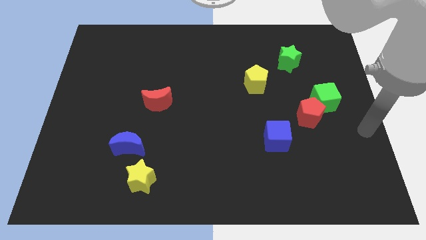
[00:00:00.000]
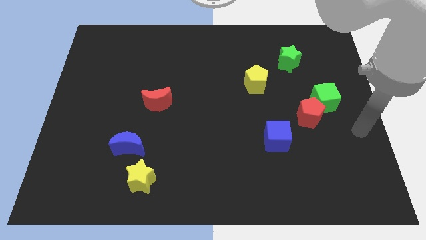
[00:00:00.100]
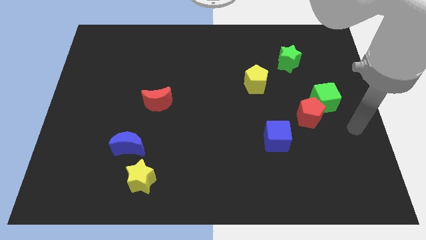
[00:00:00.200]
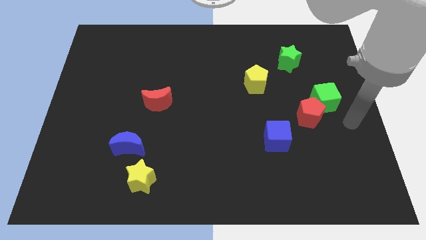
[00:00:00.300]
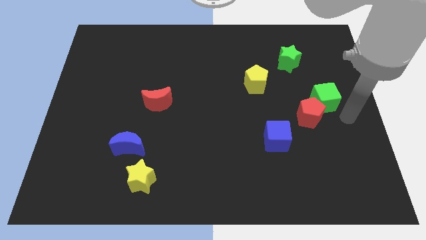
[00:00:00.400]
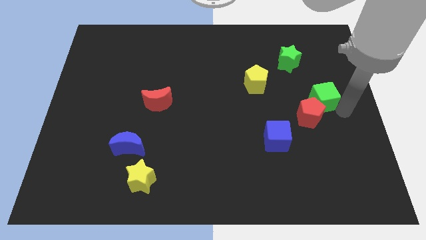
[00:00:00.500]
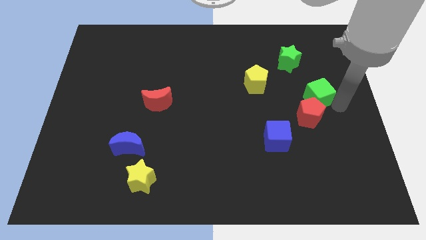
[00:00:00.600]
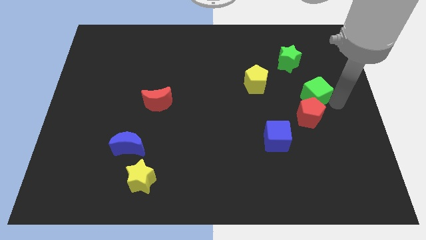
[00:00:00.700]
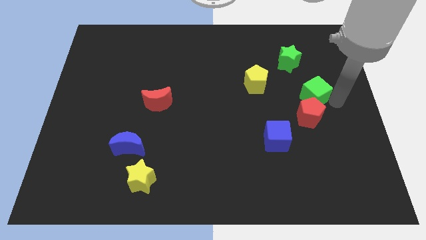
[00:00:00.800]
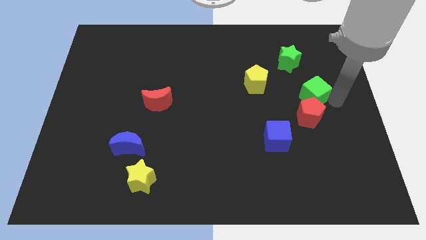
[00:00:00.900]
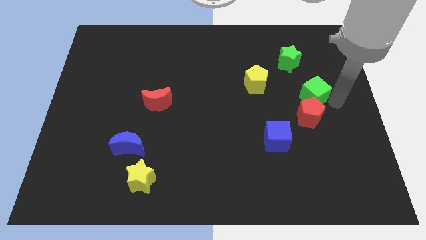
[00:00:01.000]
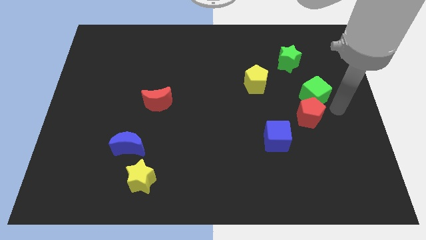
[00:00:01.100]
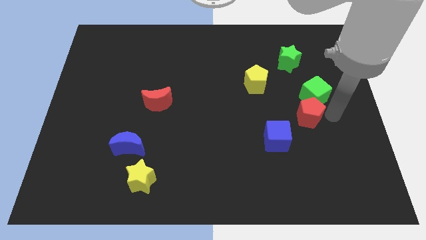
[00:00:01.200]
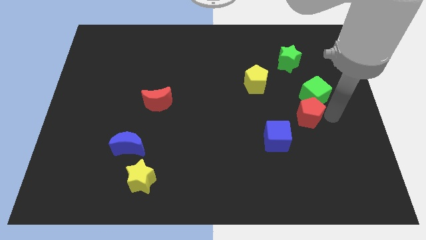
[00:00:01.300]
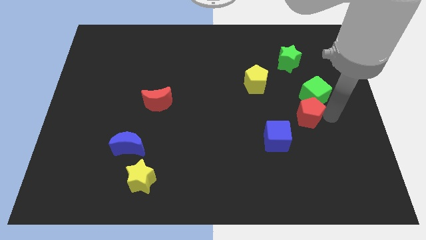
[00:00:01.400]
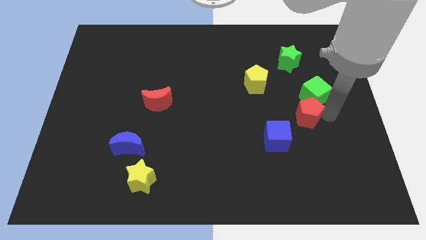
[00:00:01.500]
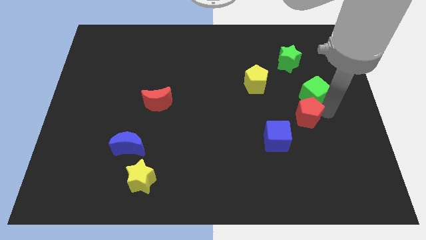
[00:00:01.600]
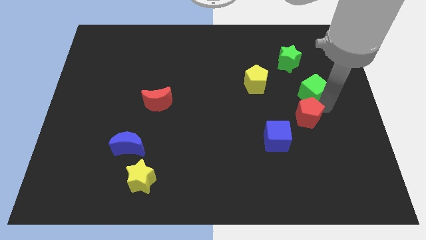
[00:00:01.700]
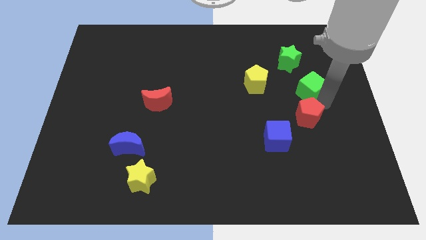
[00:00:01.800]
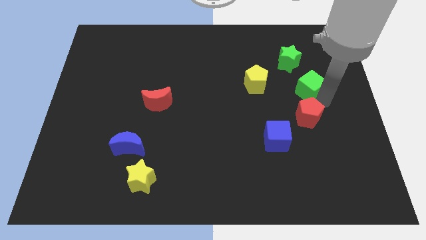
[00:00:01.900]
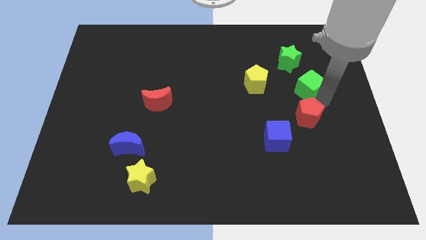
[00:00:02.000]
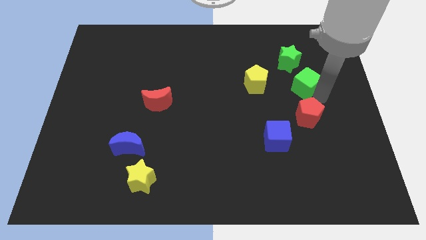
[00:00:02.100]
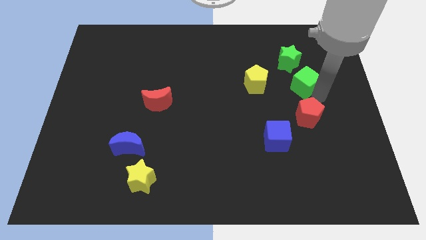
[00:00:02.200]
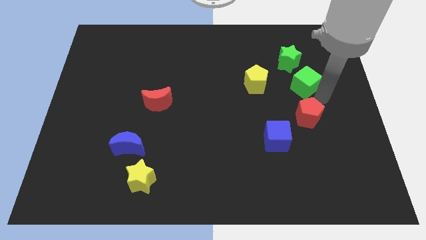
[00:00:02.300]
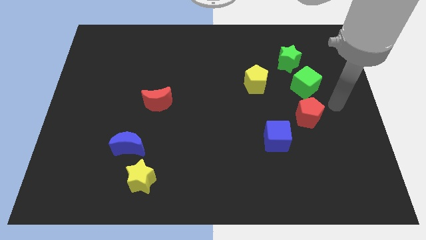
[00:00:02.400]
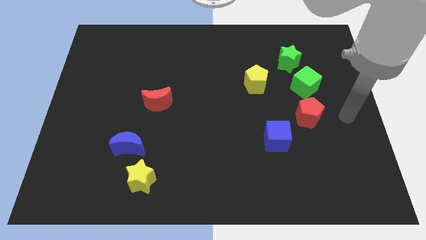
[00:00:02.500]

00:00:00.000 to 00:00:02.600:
move the green cube diagonal to the right of the yellow pentagon

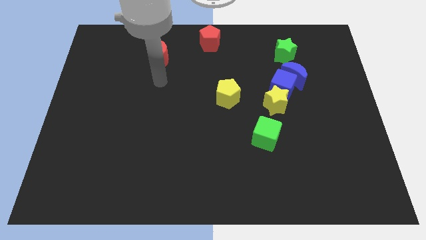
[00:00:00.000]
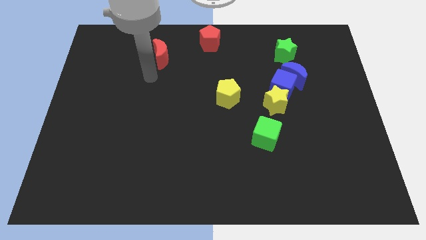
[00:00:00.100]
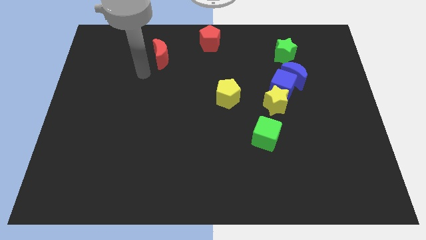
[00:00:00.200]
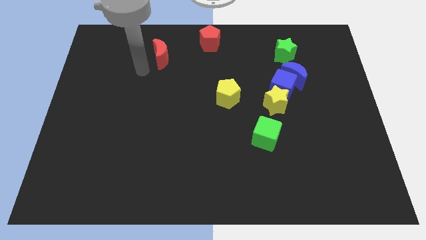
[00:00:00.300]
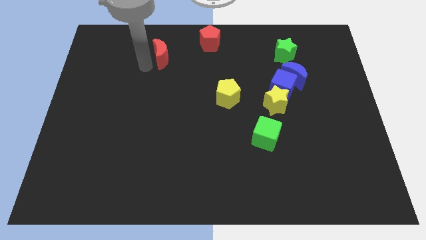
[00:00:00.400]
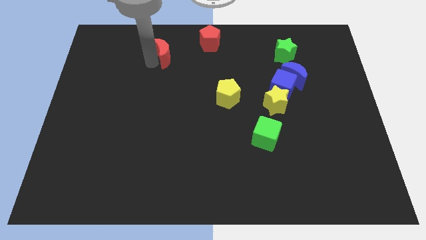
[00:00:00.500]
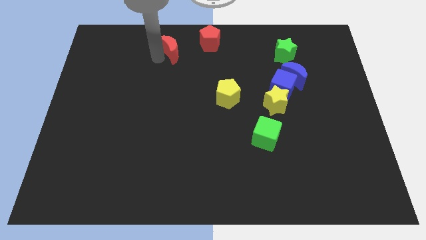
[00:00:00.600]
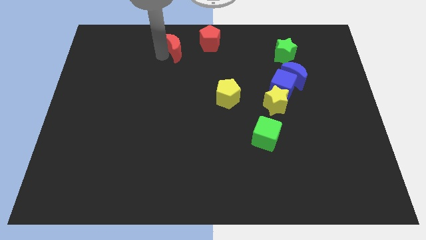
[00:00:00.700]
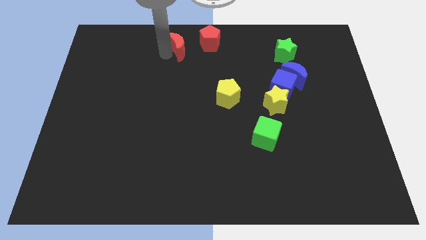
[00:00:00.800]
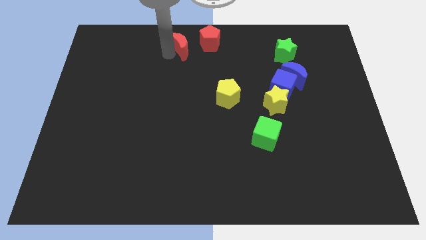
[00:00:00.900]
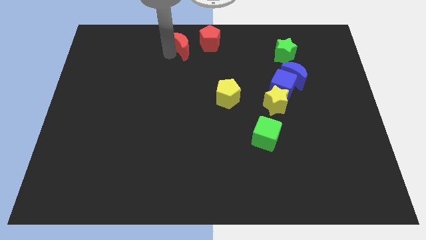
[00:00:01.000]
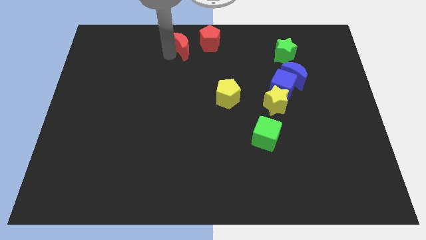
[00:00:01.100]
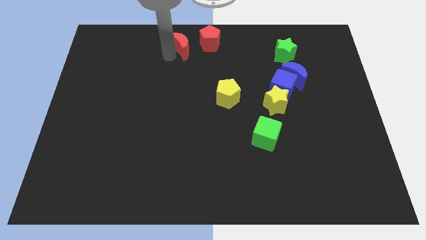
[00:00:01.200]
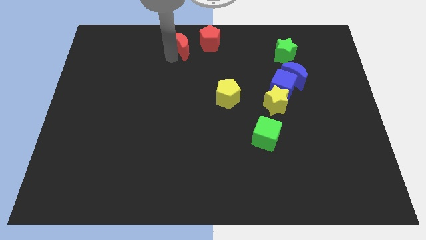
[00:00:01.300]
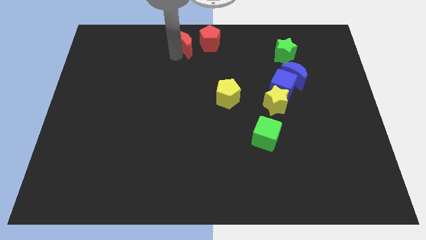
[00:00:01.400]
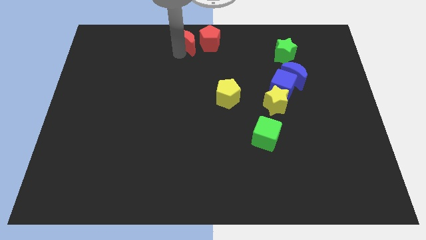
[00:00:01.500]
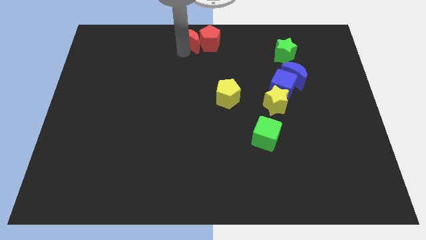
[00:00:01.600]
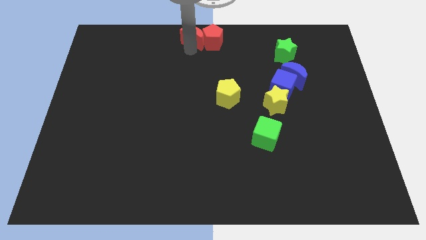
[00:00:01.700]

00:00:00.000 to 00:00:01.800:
slide the red moon close to the red pentagon

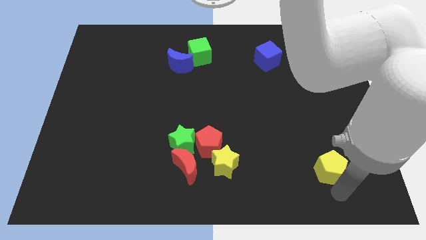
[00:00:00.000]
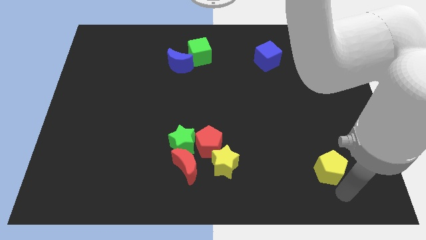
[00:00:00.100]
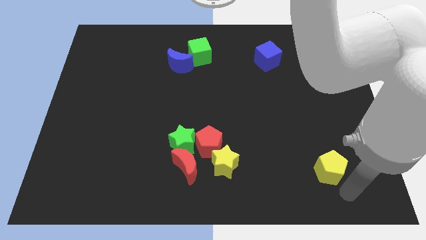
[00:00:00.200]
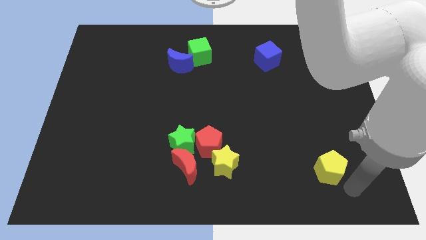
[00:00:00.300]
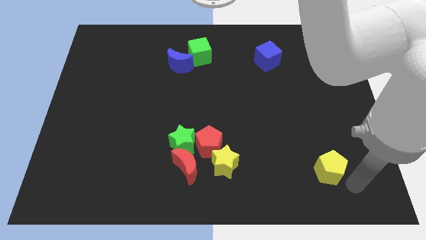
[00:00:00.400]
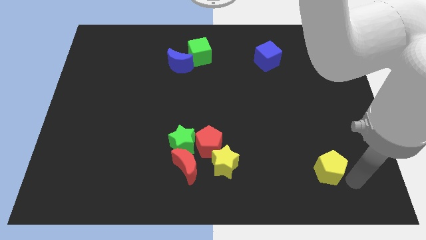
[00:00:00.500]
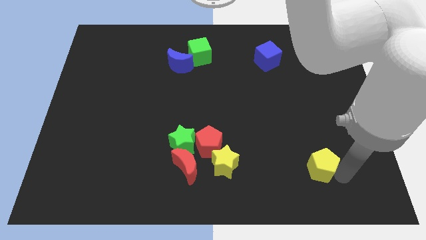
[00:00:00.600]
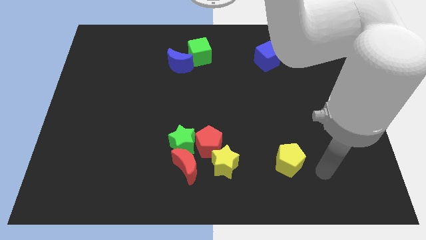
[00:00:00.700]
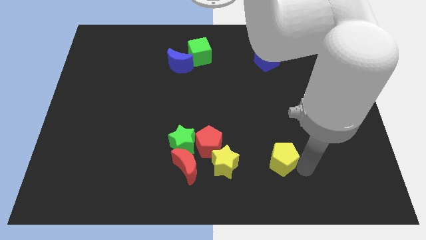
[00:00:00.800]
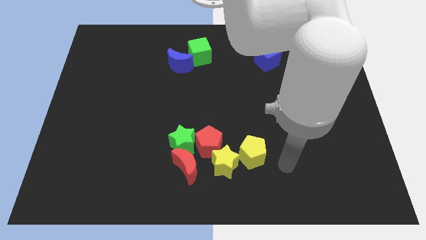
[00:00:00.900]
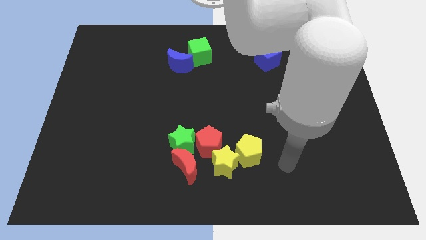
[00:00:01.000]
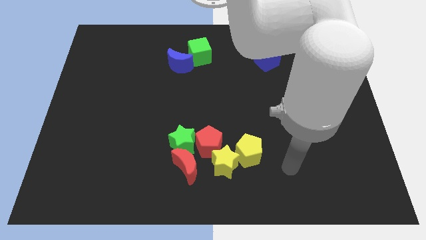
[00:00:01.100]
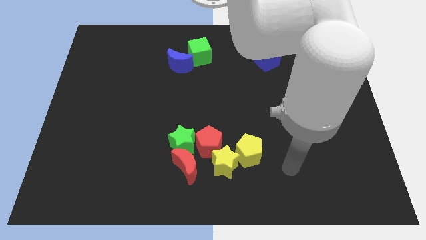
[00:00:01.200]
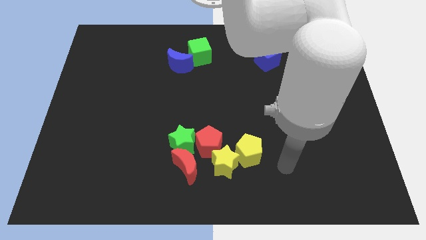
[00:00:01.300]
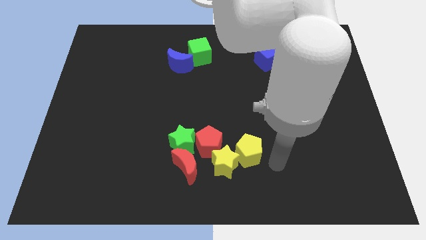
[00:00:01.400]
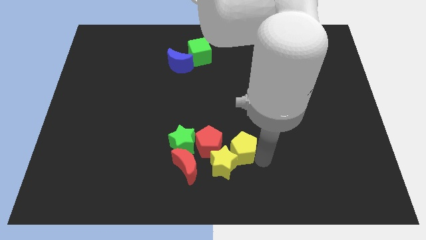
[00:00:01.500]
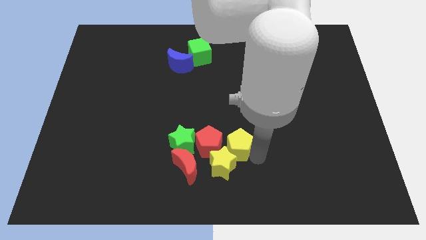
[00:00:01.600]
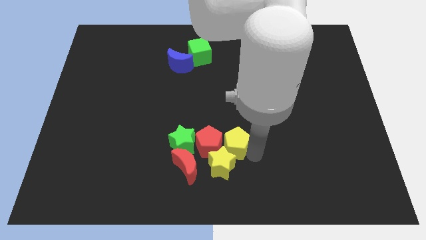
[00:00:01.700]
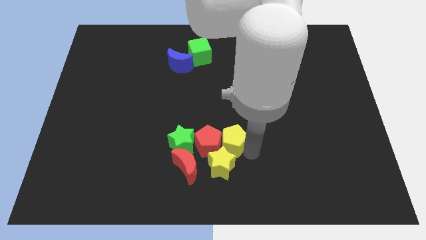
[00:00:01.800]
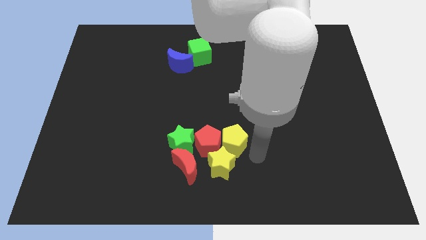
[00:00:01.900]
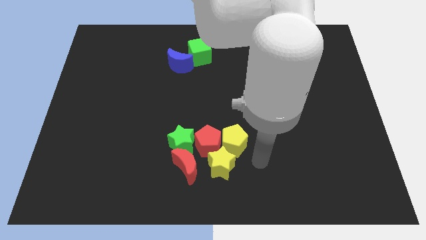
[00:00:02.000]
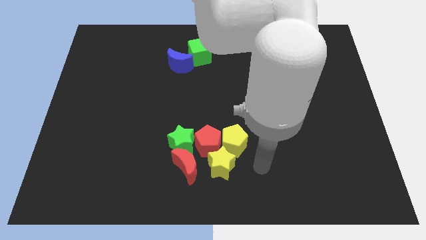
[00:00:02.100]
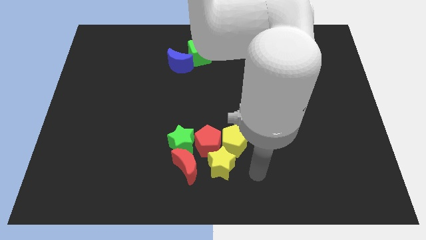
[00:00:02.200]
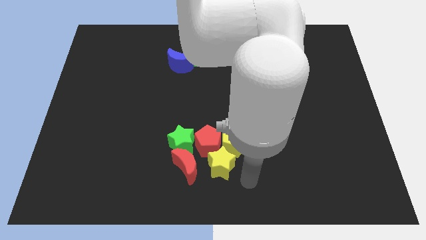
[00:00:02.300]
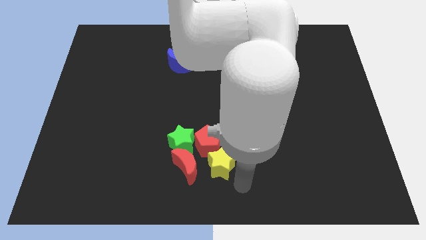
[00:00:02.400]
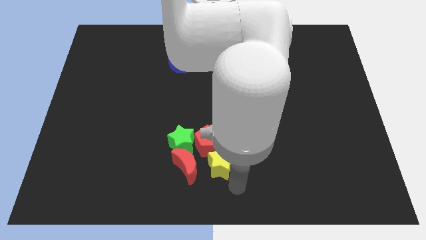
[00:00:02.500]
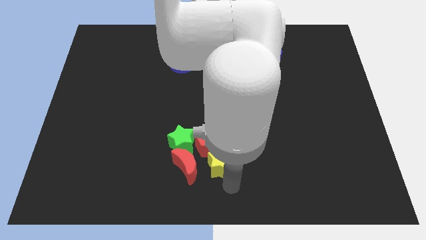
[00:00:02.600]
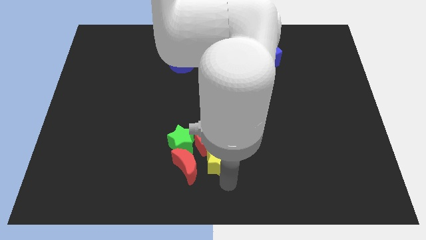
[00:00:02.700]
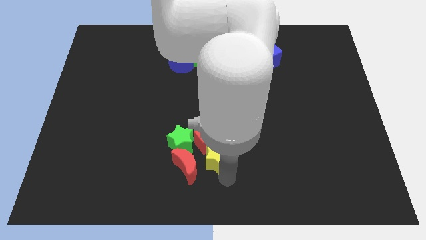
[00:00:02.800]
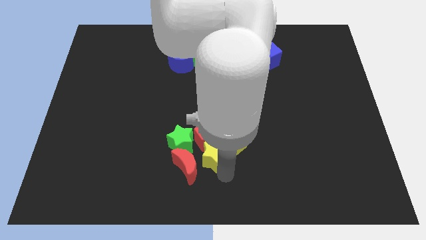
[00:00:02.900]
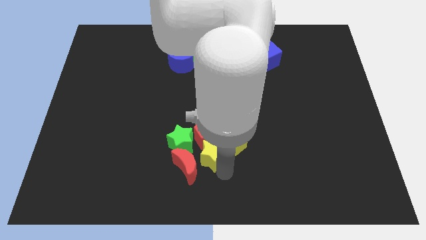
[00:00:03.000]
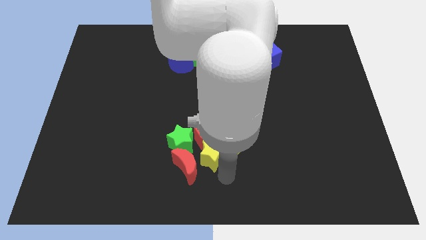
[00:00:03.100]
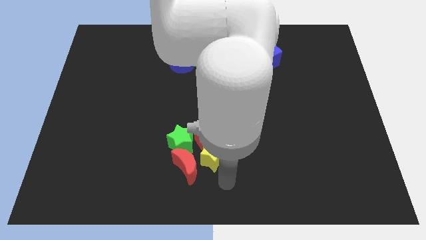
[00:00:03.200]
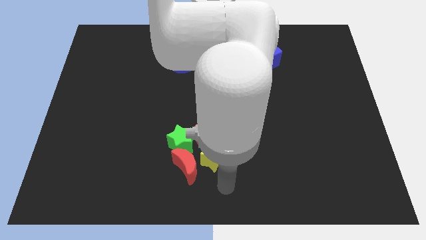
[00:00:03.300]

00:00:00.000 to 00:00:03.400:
slide the yellow pentagon into the group of blocks

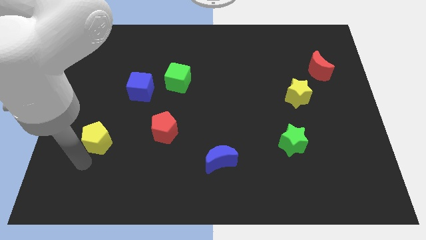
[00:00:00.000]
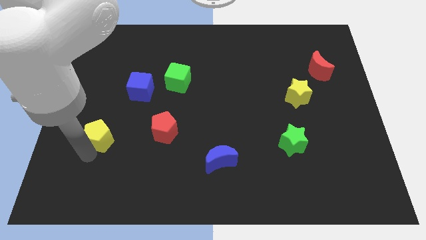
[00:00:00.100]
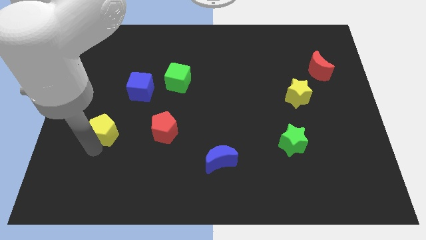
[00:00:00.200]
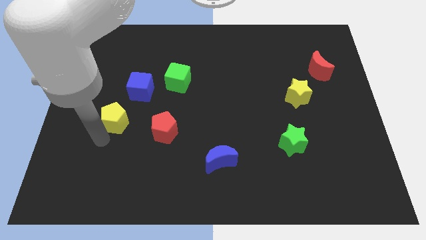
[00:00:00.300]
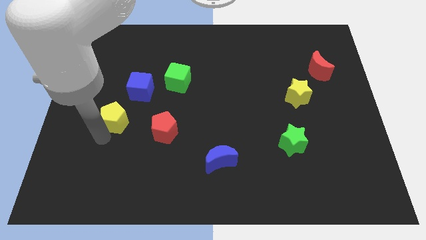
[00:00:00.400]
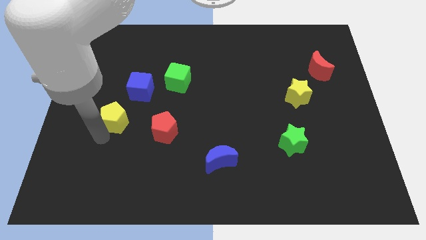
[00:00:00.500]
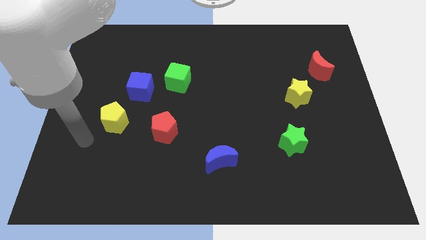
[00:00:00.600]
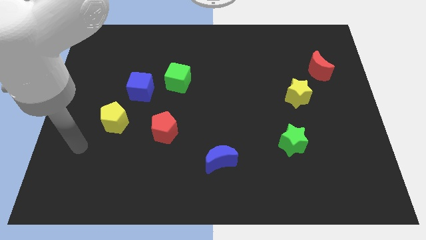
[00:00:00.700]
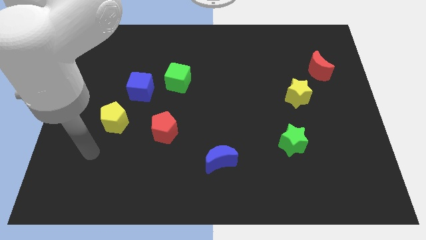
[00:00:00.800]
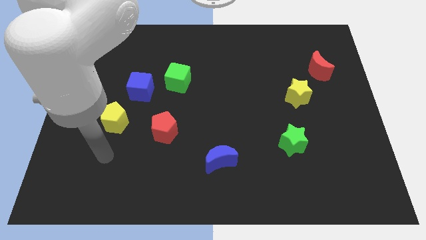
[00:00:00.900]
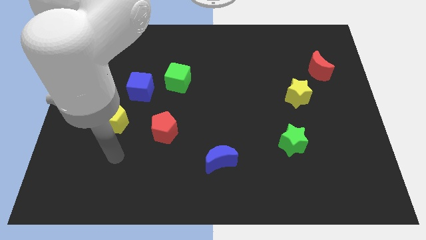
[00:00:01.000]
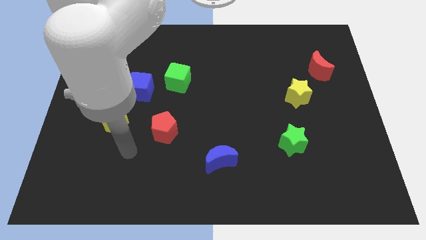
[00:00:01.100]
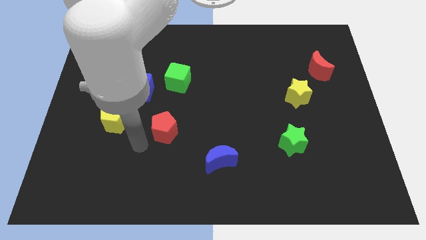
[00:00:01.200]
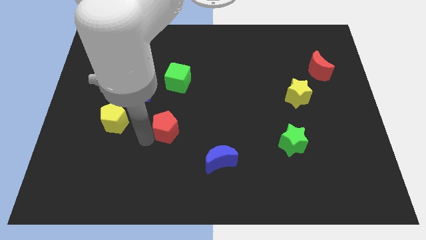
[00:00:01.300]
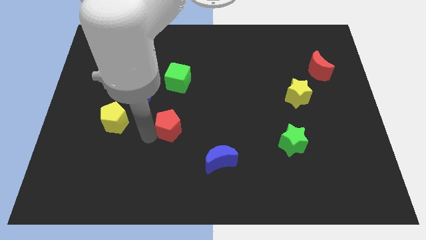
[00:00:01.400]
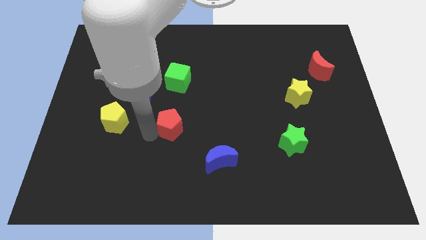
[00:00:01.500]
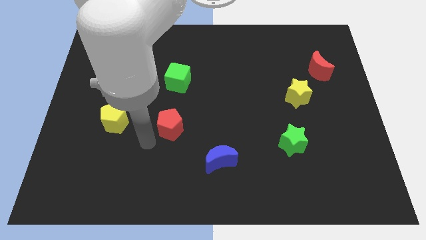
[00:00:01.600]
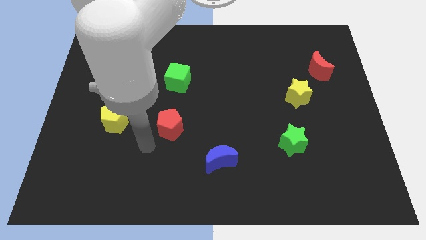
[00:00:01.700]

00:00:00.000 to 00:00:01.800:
slightly drag the yellow pentagon and red pentagon towards top
